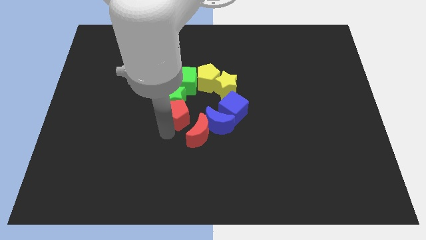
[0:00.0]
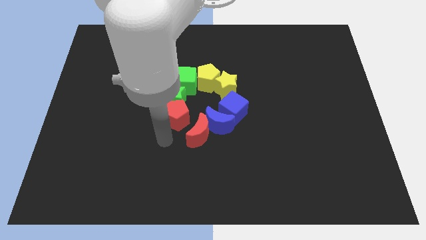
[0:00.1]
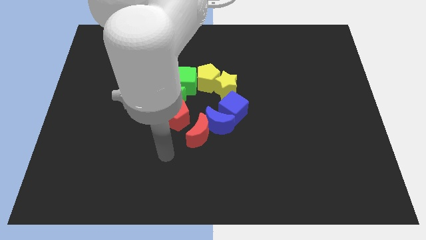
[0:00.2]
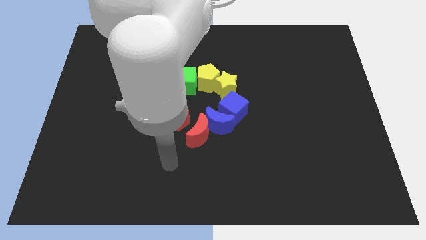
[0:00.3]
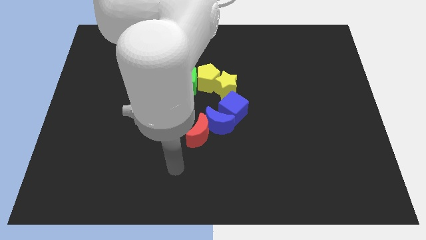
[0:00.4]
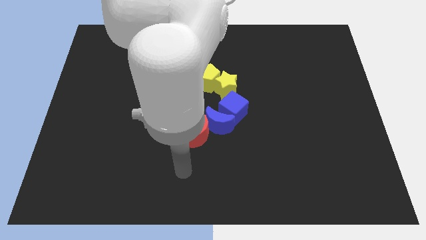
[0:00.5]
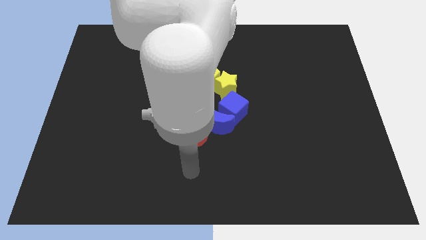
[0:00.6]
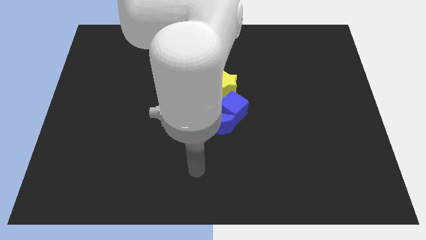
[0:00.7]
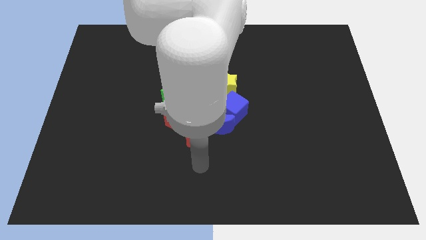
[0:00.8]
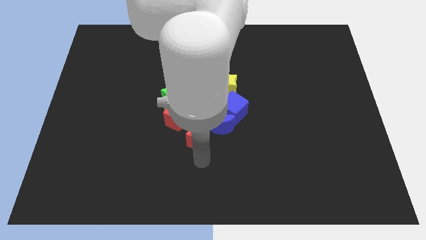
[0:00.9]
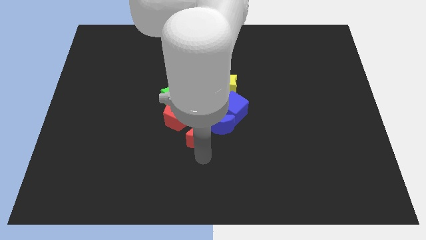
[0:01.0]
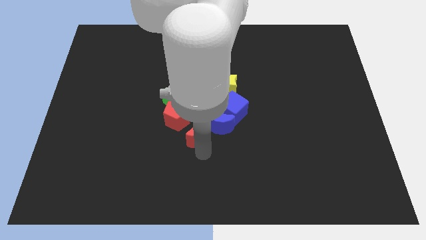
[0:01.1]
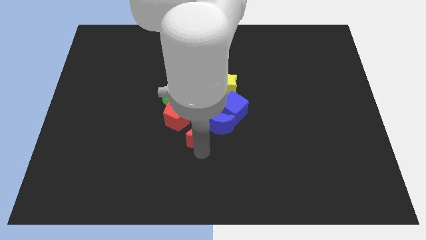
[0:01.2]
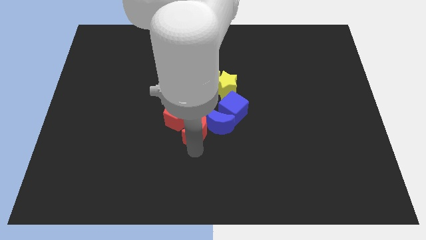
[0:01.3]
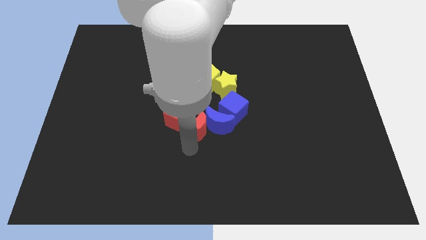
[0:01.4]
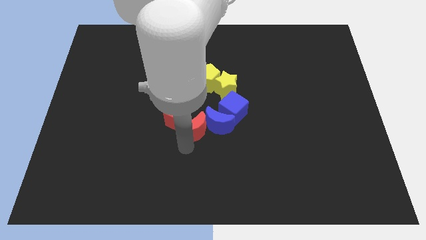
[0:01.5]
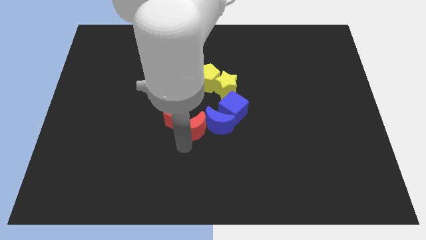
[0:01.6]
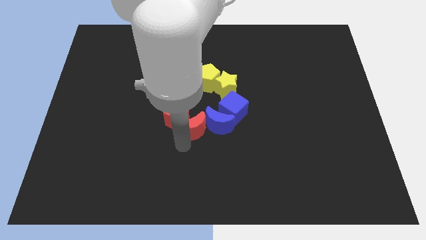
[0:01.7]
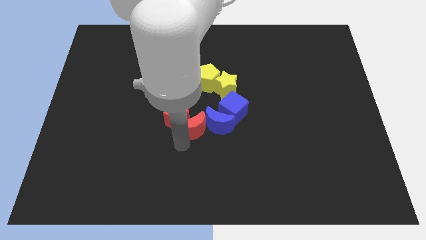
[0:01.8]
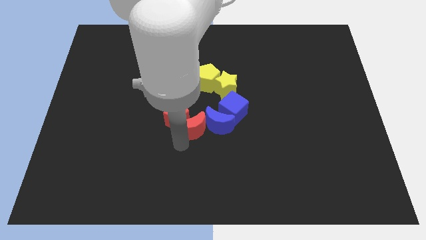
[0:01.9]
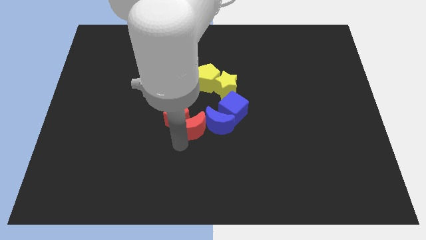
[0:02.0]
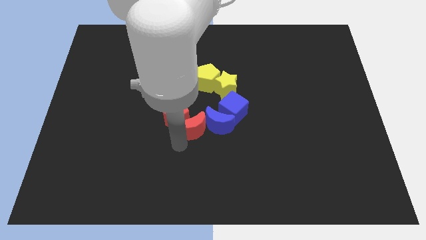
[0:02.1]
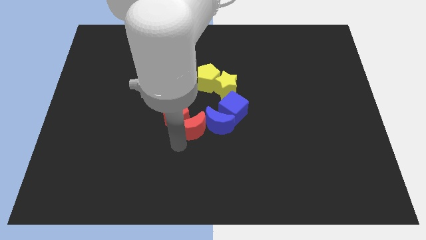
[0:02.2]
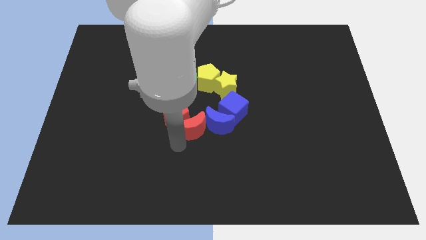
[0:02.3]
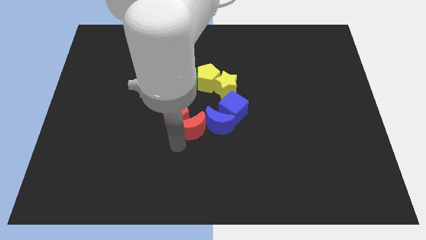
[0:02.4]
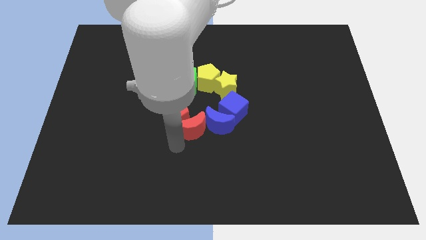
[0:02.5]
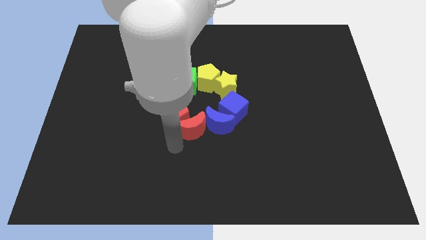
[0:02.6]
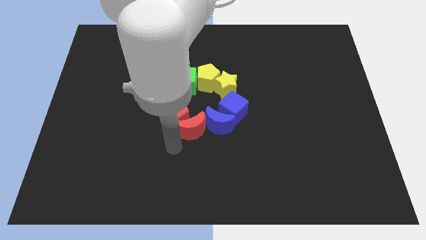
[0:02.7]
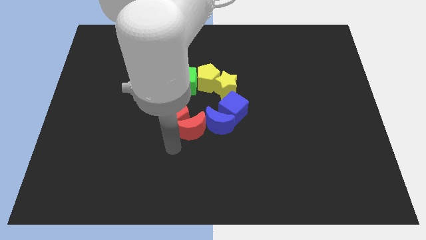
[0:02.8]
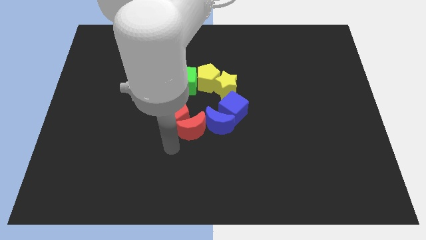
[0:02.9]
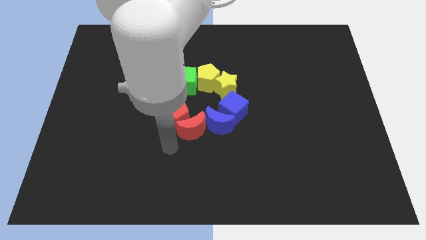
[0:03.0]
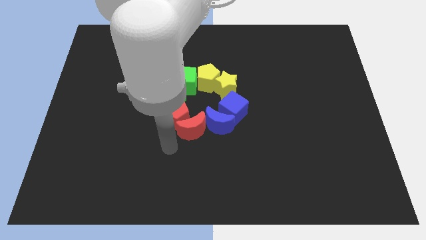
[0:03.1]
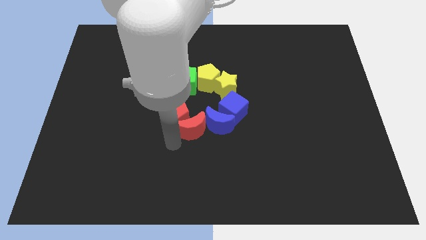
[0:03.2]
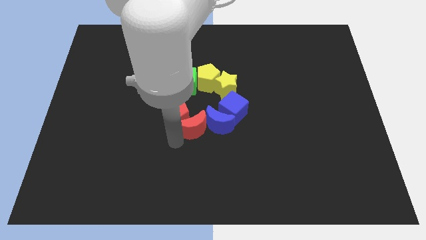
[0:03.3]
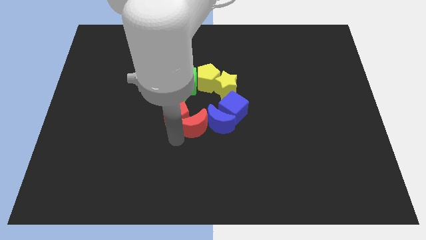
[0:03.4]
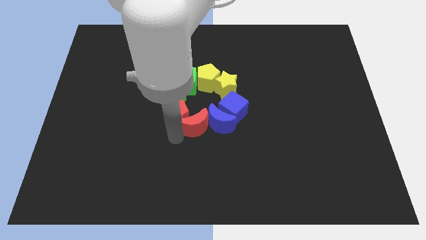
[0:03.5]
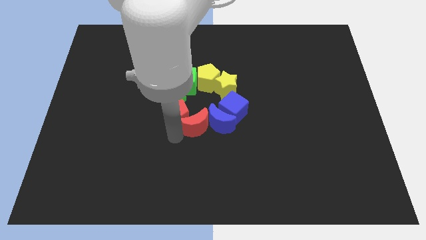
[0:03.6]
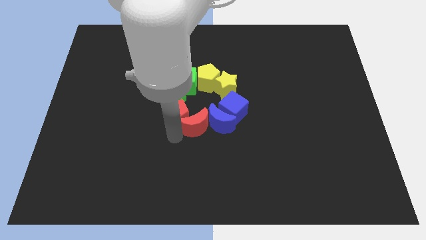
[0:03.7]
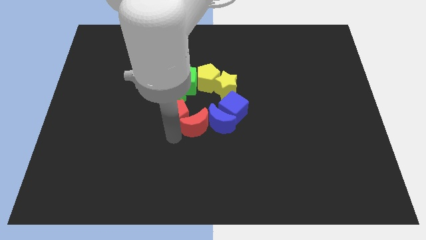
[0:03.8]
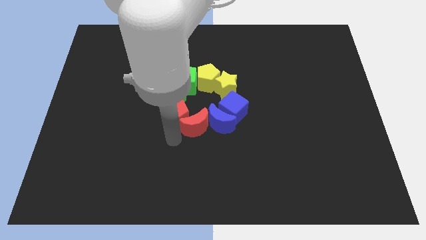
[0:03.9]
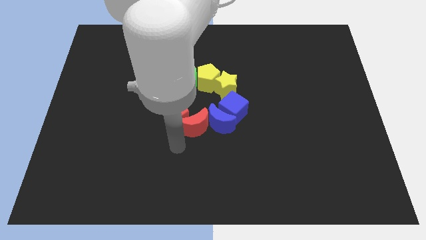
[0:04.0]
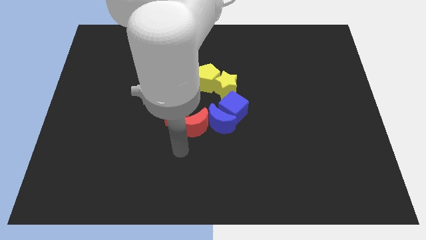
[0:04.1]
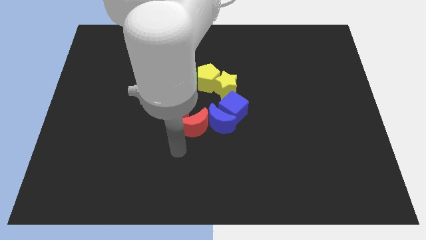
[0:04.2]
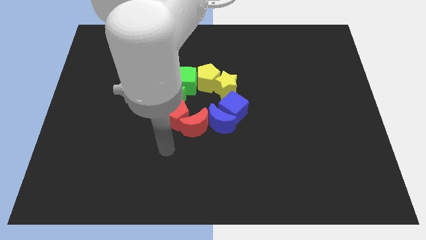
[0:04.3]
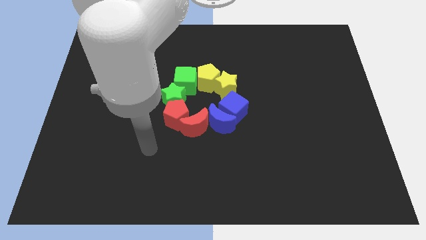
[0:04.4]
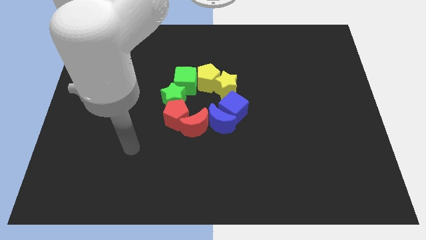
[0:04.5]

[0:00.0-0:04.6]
move the red crescent slightly towards the bottom right of the red pentagon

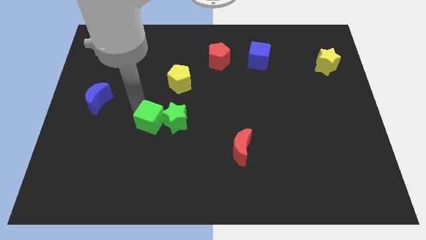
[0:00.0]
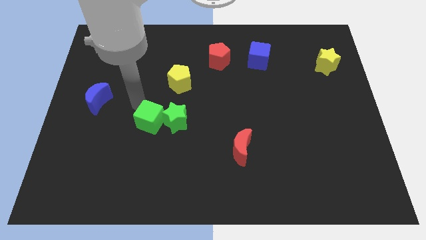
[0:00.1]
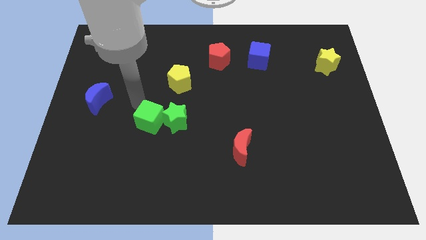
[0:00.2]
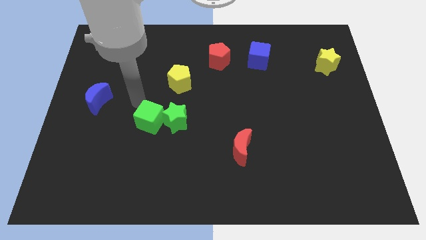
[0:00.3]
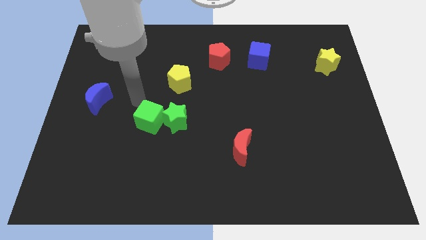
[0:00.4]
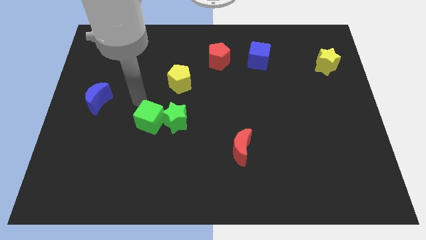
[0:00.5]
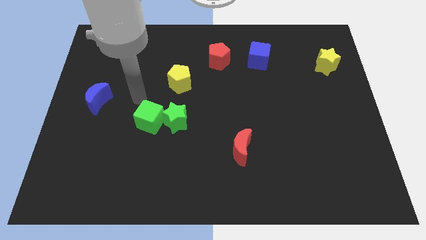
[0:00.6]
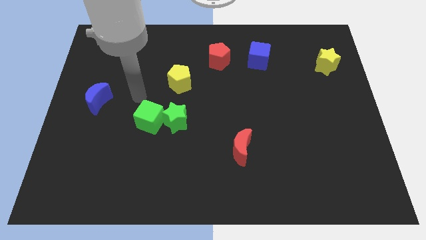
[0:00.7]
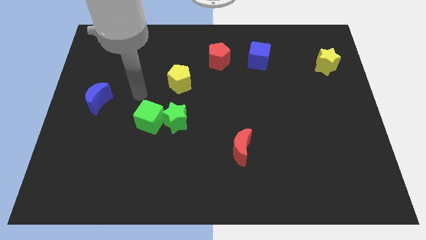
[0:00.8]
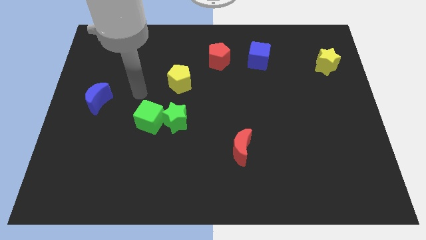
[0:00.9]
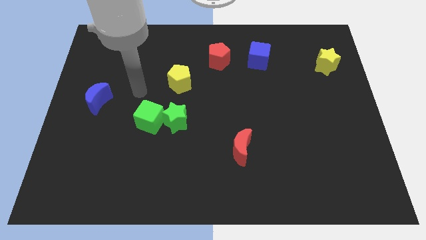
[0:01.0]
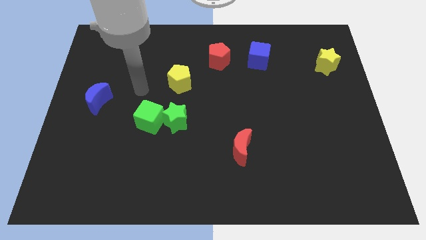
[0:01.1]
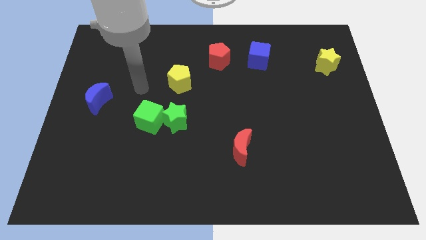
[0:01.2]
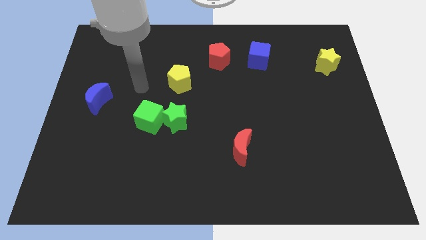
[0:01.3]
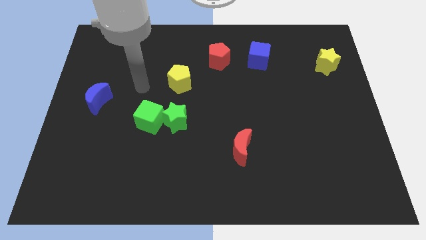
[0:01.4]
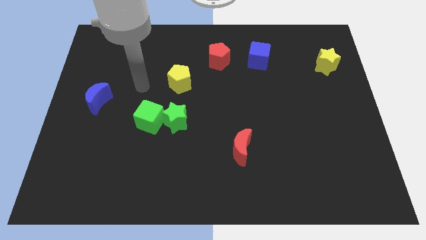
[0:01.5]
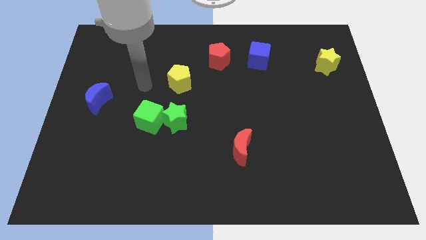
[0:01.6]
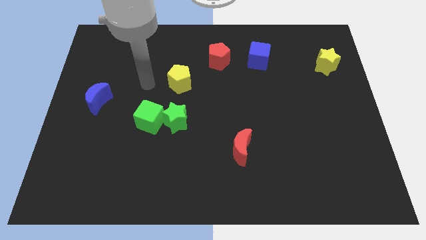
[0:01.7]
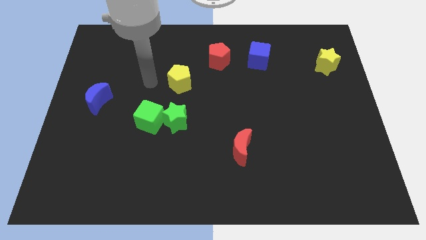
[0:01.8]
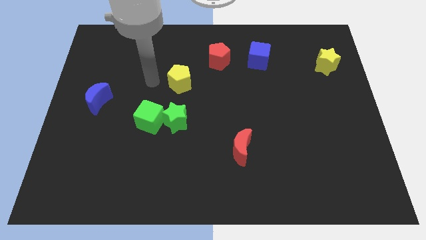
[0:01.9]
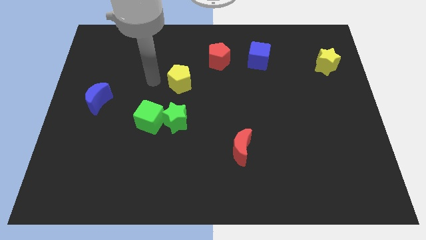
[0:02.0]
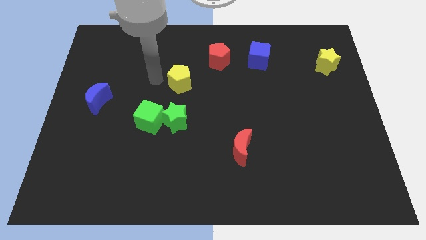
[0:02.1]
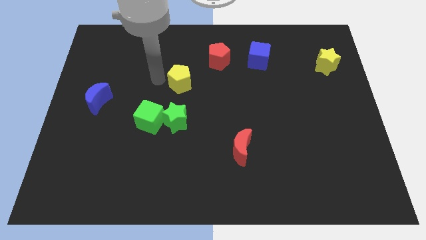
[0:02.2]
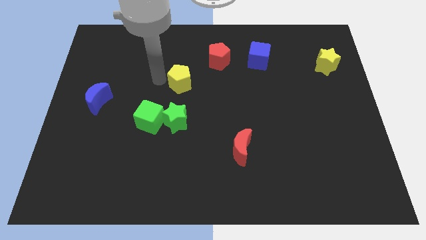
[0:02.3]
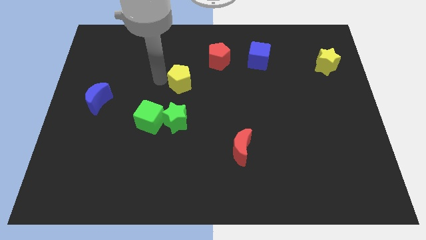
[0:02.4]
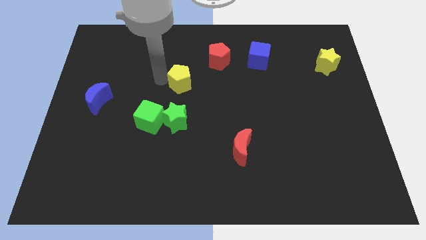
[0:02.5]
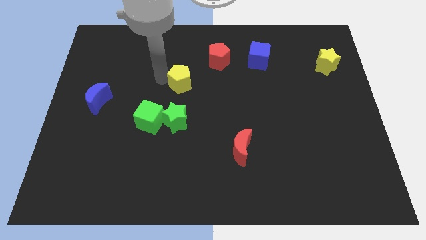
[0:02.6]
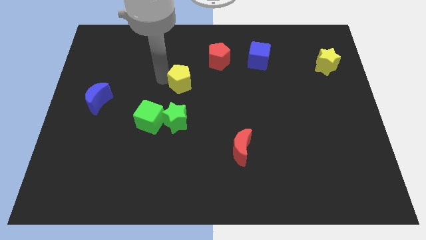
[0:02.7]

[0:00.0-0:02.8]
touch the left side of the yellow pentagon

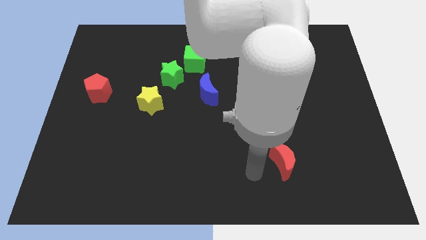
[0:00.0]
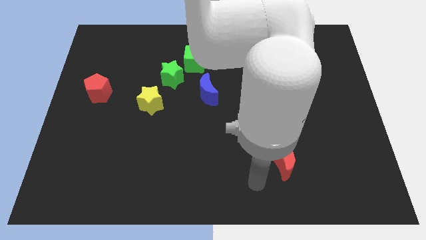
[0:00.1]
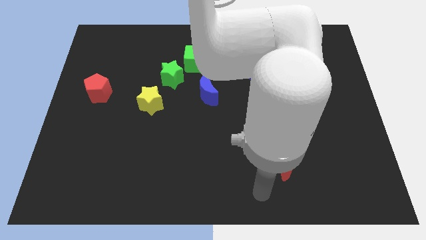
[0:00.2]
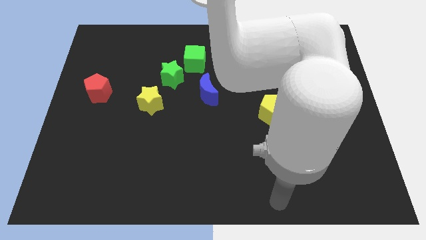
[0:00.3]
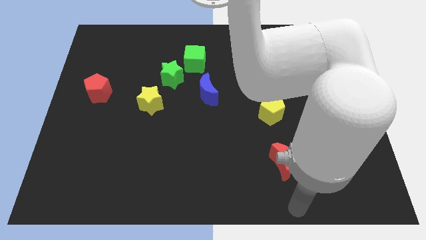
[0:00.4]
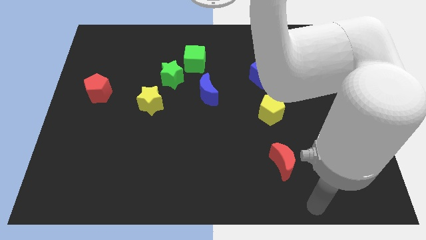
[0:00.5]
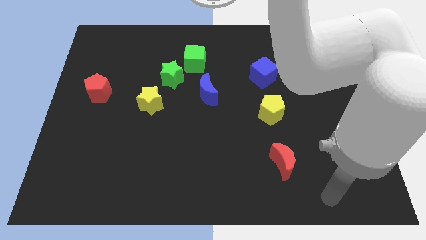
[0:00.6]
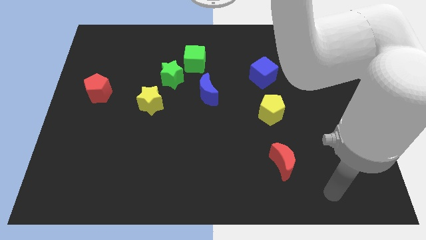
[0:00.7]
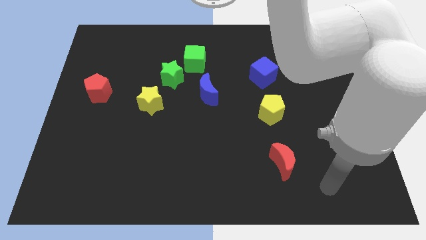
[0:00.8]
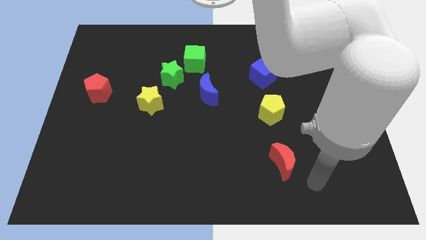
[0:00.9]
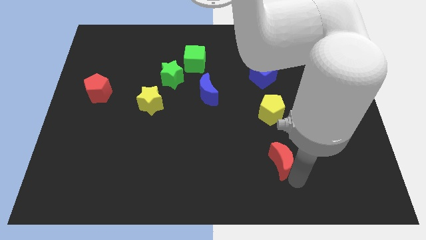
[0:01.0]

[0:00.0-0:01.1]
place the arm near the red moon

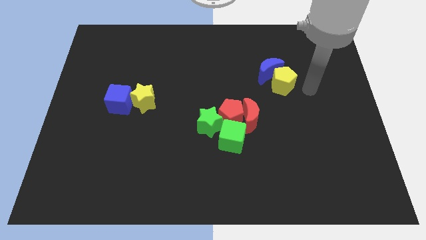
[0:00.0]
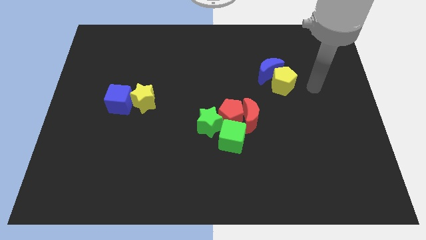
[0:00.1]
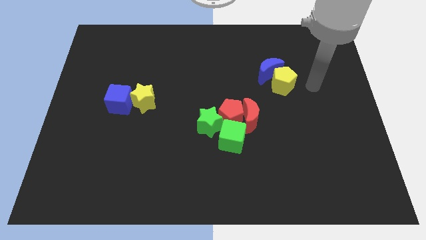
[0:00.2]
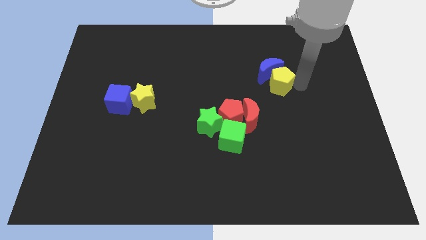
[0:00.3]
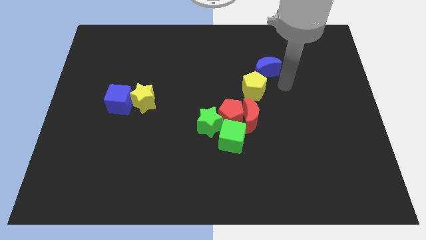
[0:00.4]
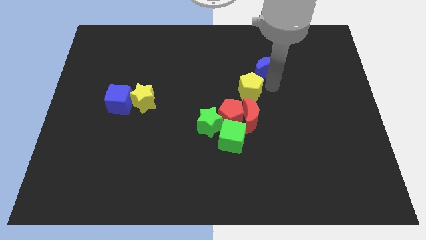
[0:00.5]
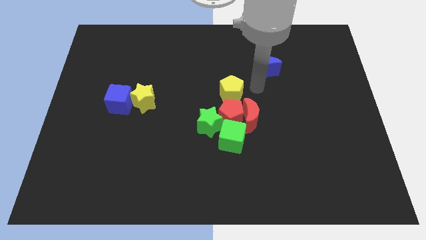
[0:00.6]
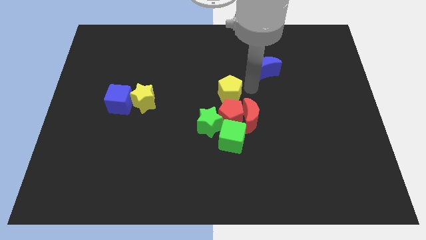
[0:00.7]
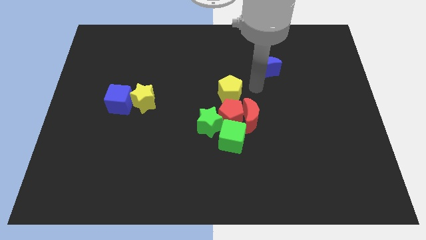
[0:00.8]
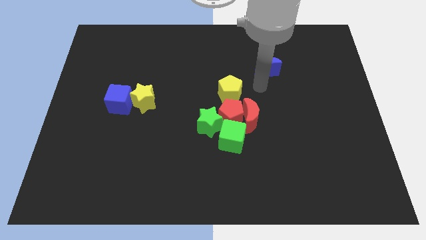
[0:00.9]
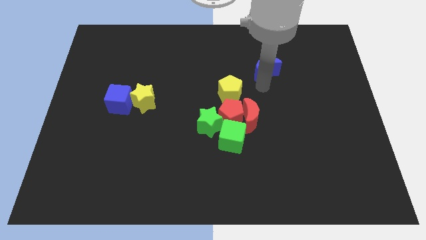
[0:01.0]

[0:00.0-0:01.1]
separate yellow pentagon from blue moon
